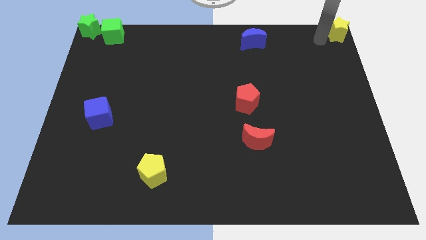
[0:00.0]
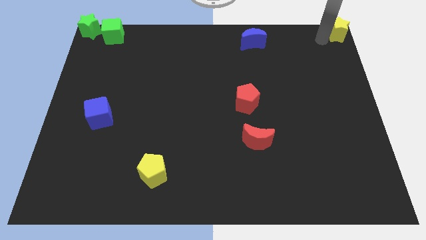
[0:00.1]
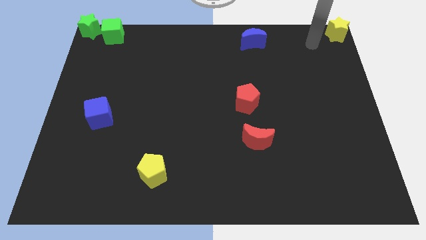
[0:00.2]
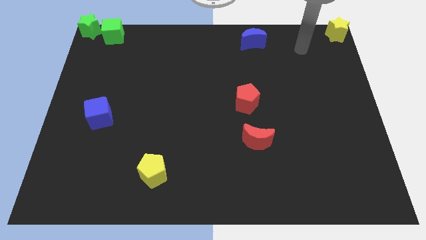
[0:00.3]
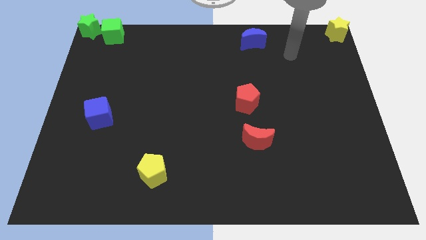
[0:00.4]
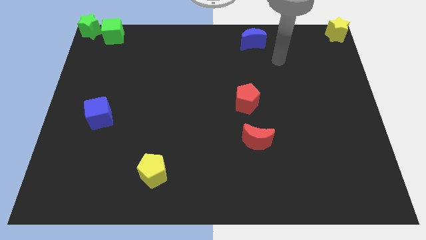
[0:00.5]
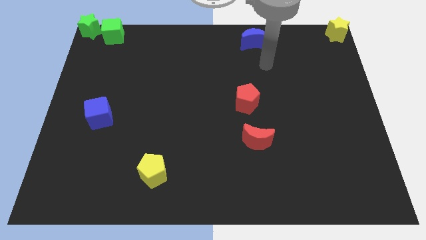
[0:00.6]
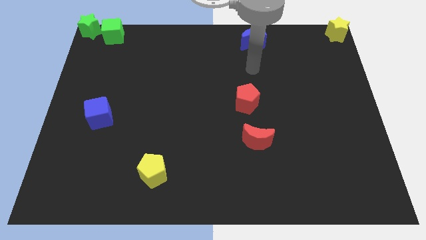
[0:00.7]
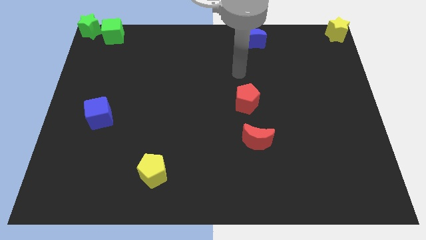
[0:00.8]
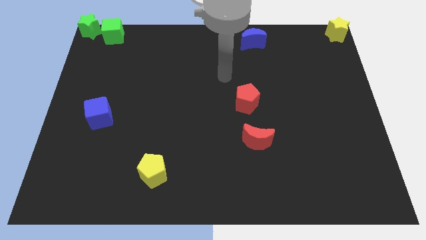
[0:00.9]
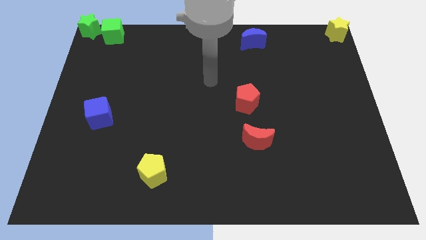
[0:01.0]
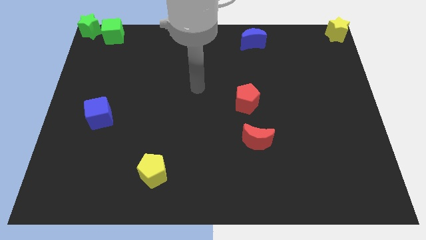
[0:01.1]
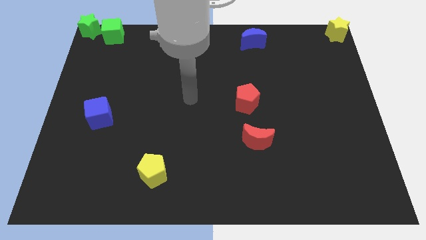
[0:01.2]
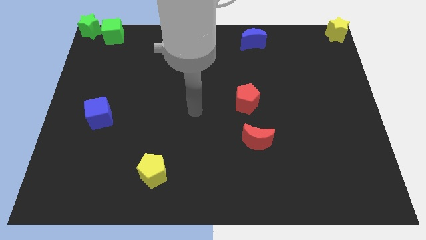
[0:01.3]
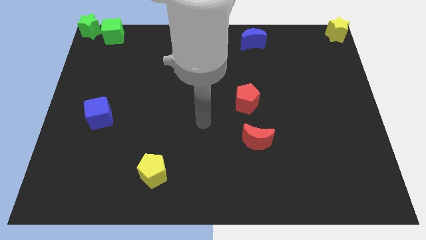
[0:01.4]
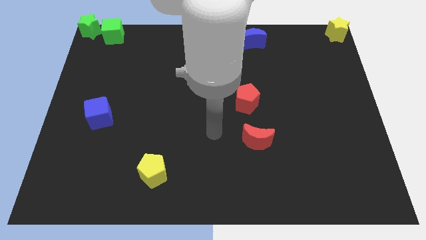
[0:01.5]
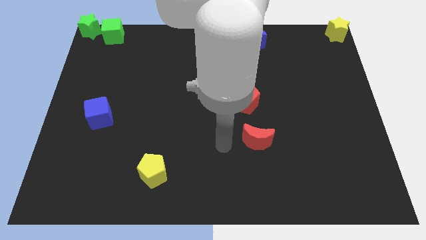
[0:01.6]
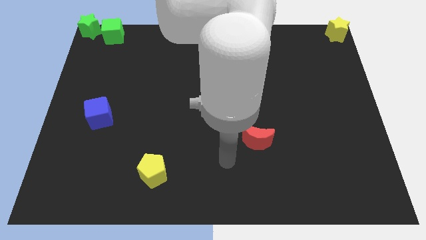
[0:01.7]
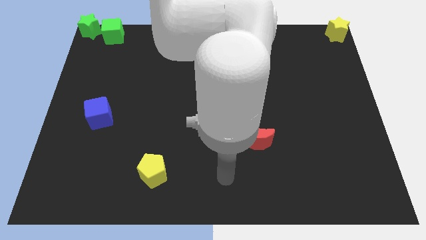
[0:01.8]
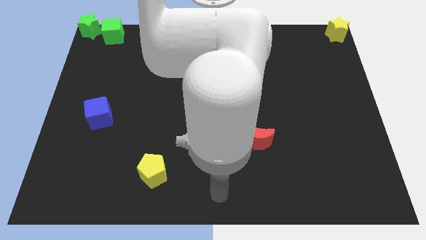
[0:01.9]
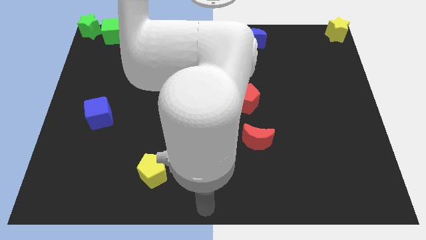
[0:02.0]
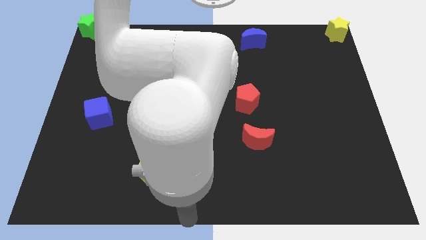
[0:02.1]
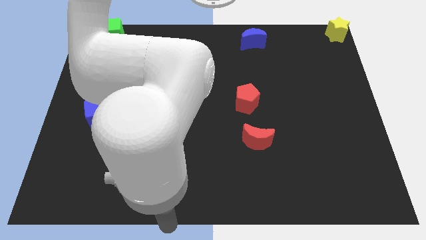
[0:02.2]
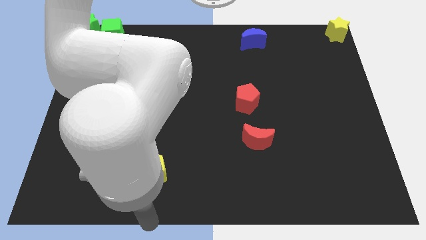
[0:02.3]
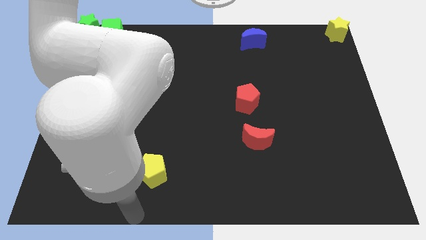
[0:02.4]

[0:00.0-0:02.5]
move your arm to the bottom center

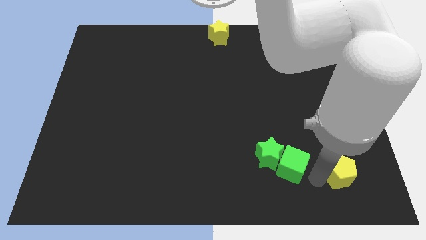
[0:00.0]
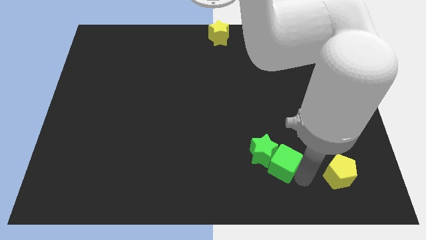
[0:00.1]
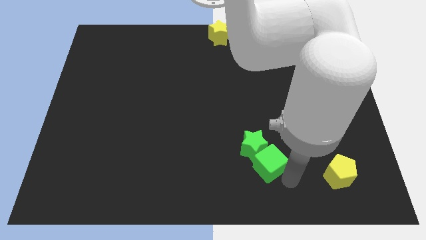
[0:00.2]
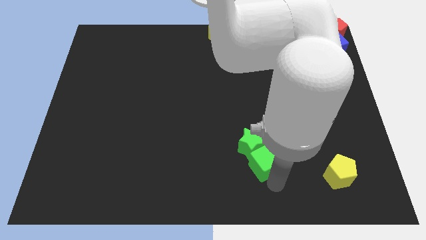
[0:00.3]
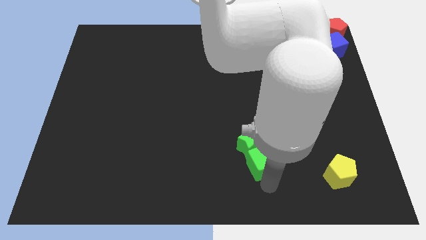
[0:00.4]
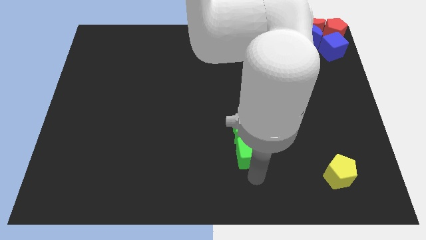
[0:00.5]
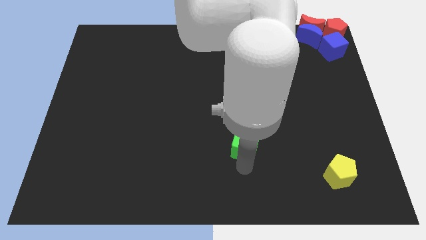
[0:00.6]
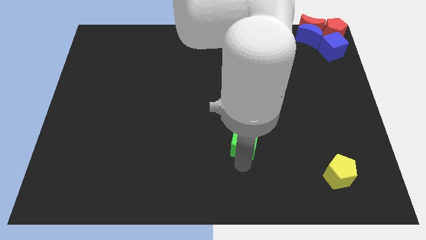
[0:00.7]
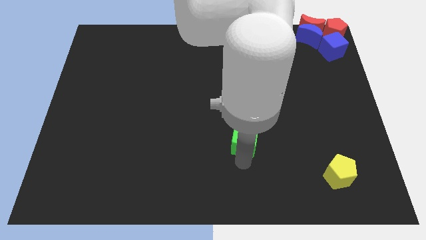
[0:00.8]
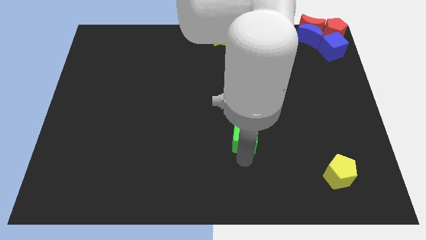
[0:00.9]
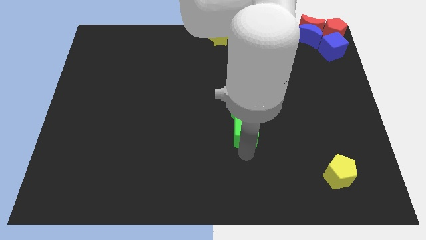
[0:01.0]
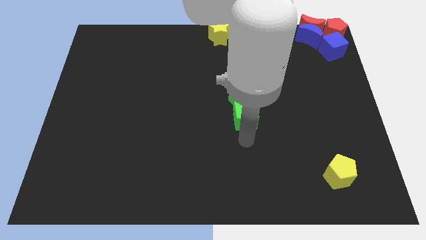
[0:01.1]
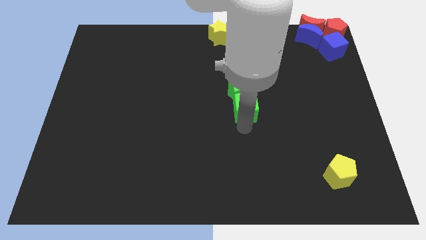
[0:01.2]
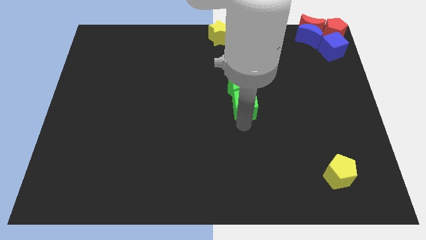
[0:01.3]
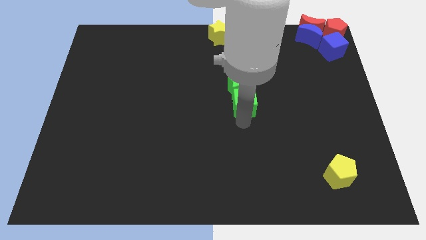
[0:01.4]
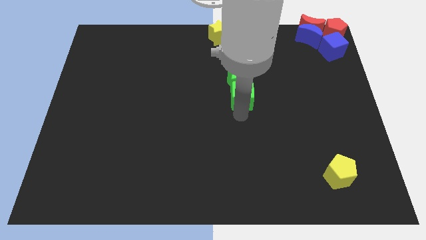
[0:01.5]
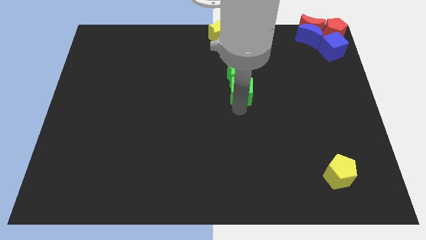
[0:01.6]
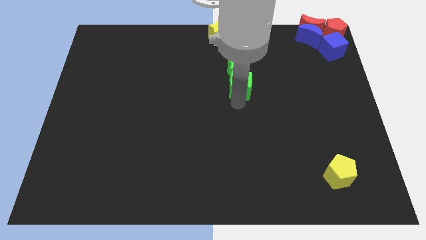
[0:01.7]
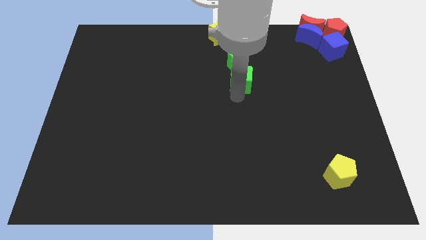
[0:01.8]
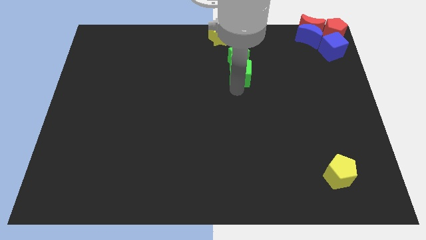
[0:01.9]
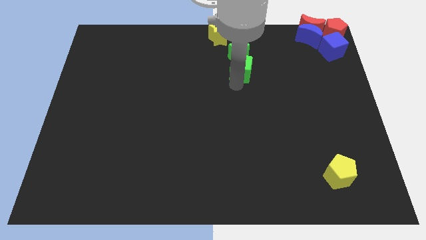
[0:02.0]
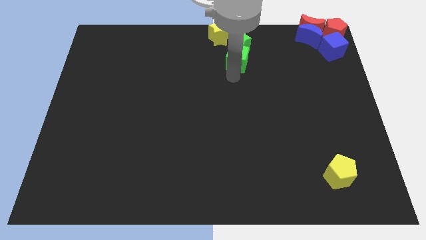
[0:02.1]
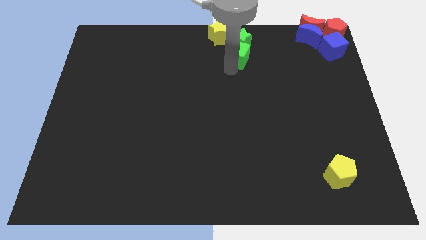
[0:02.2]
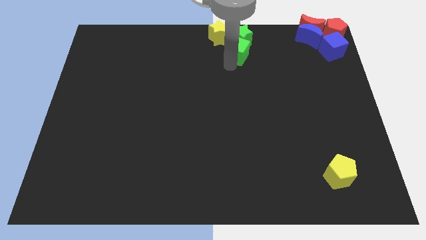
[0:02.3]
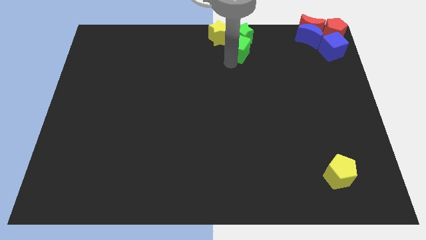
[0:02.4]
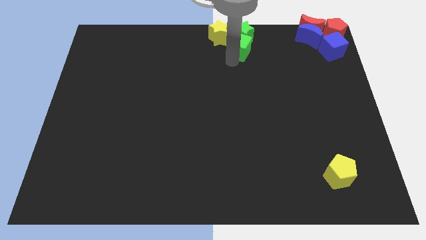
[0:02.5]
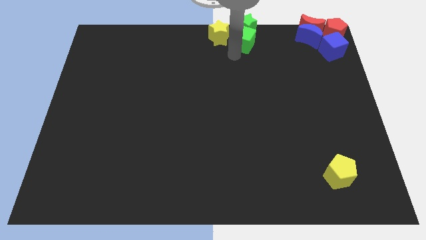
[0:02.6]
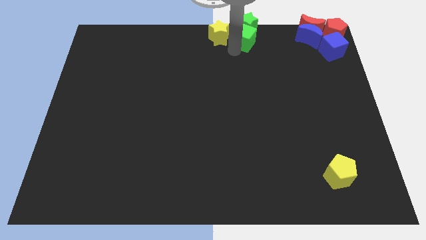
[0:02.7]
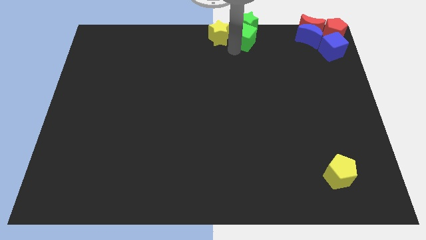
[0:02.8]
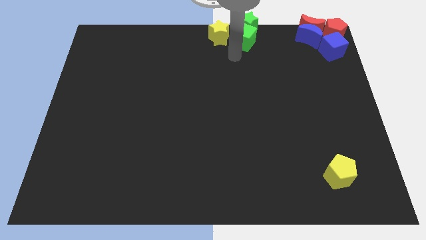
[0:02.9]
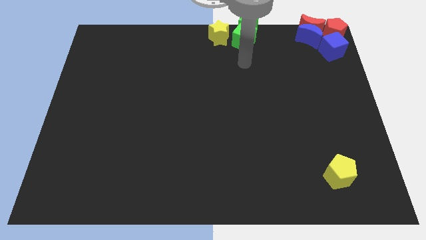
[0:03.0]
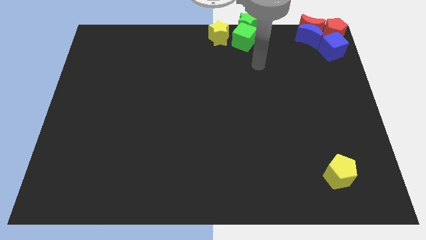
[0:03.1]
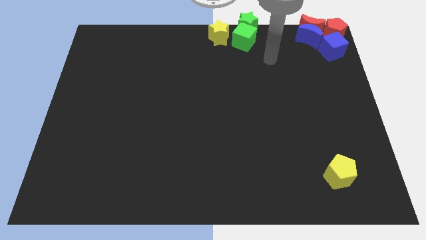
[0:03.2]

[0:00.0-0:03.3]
move the green cube along with green star to the top center of the board

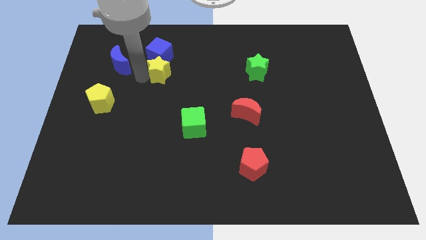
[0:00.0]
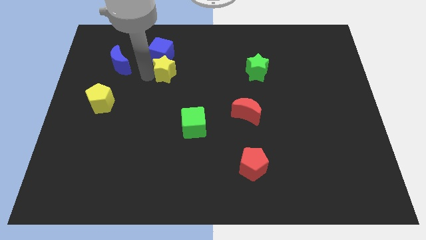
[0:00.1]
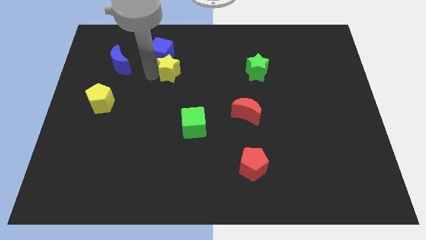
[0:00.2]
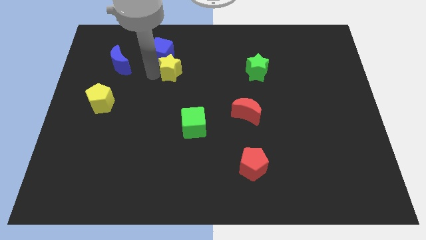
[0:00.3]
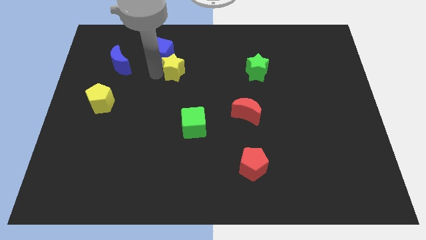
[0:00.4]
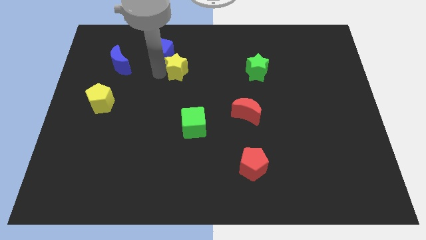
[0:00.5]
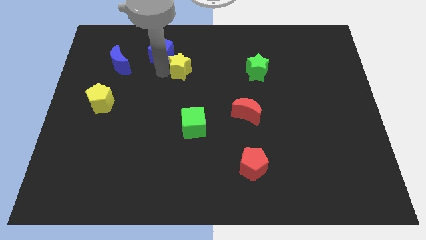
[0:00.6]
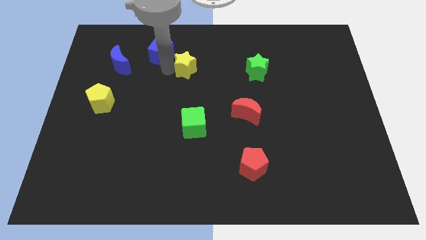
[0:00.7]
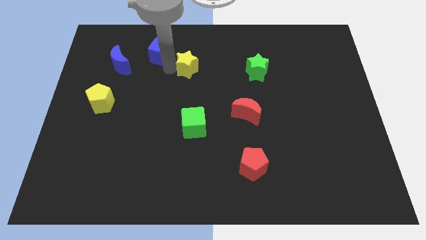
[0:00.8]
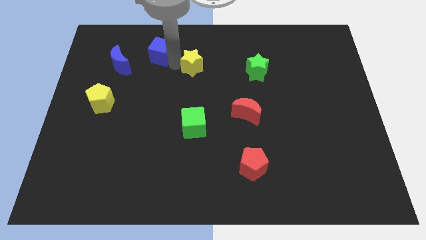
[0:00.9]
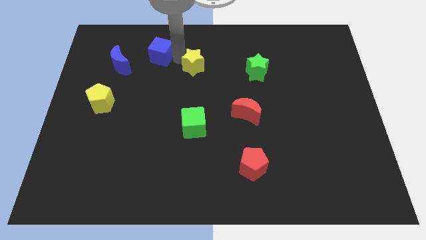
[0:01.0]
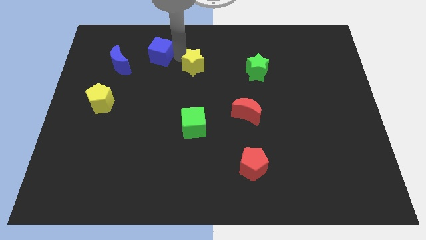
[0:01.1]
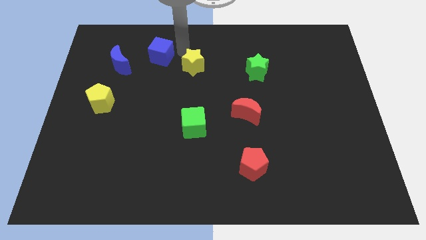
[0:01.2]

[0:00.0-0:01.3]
separate the yellow star from blue cube

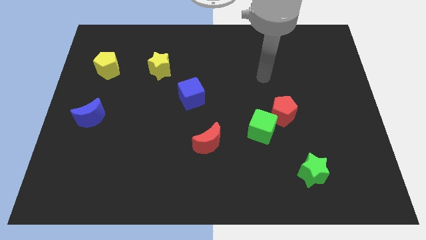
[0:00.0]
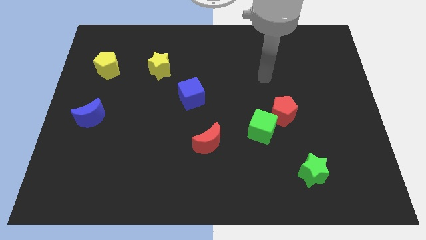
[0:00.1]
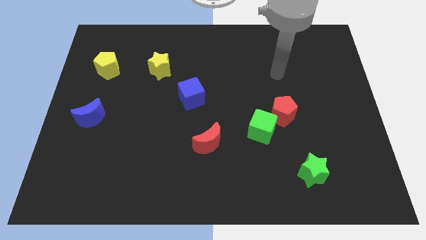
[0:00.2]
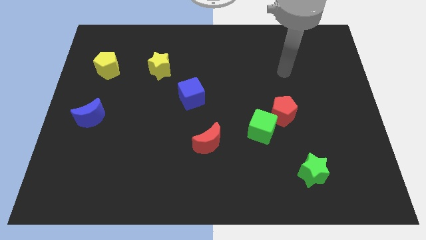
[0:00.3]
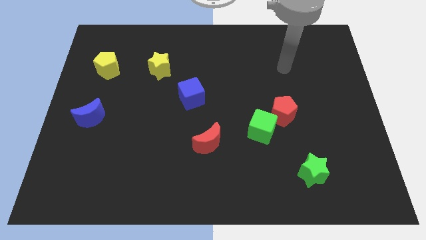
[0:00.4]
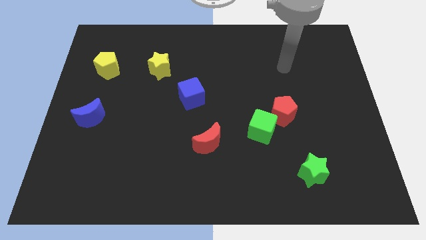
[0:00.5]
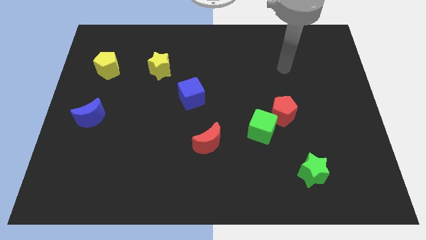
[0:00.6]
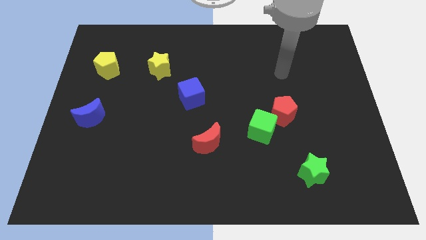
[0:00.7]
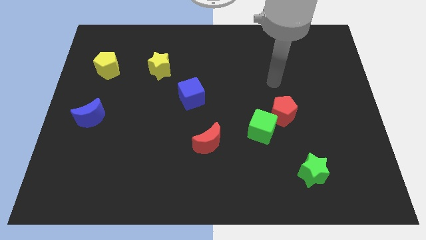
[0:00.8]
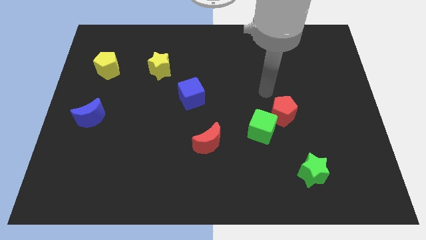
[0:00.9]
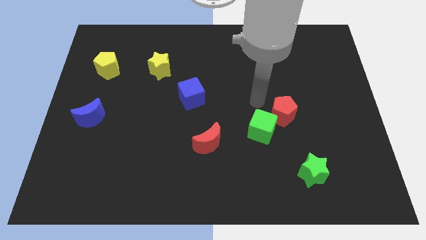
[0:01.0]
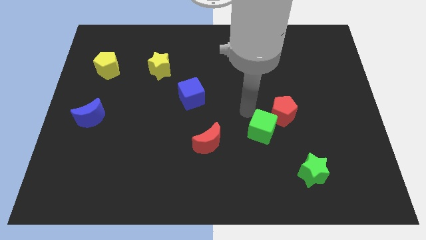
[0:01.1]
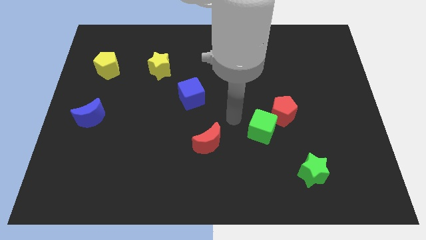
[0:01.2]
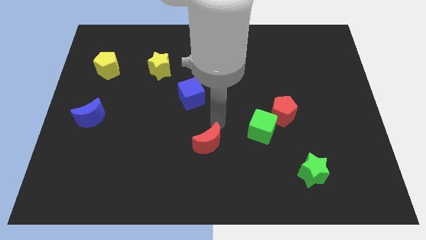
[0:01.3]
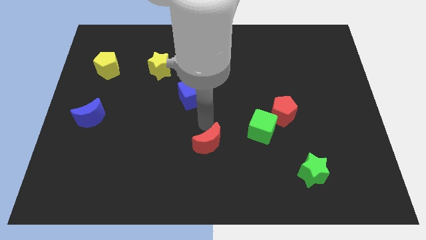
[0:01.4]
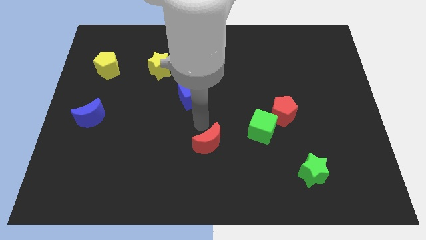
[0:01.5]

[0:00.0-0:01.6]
place your hand vertically below the blue cube

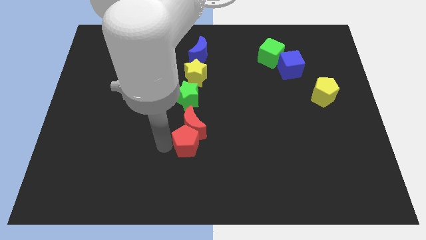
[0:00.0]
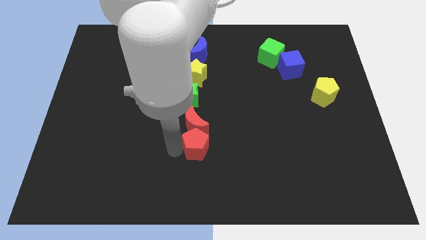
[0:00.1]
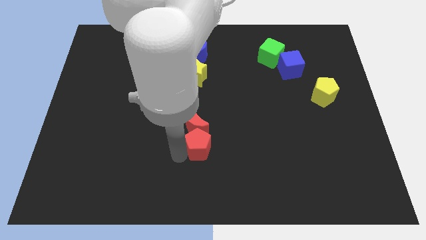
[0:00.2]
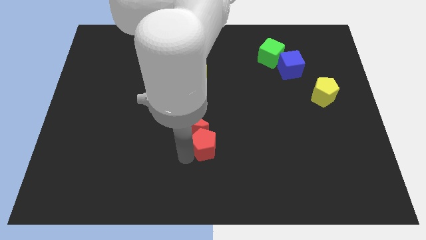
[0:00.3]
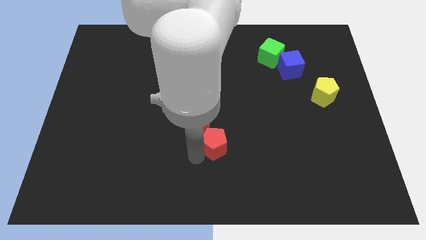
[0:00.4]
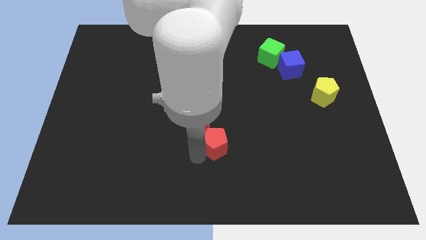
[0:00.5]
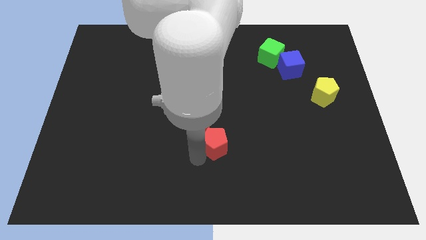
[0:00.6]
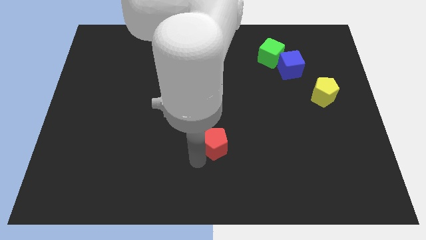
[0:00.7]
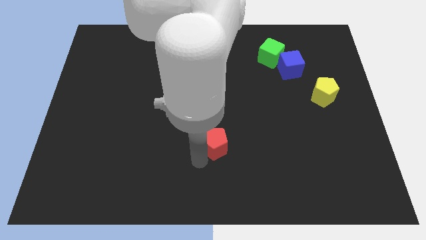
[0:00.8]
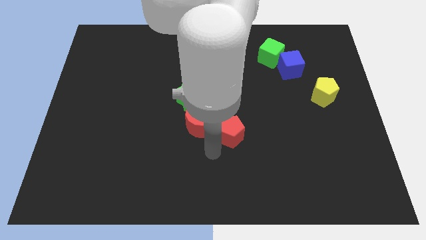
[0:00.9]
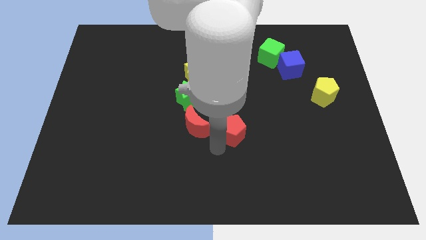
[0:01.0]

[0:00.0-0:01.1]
separate red pentagon and red moon
